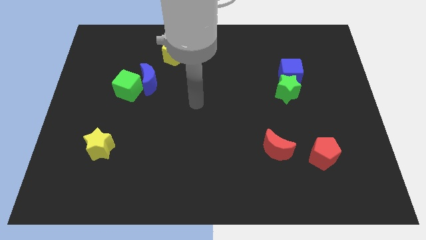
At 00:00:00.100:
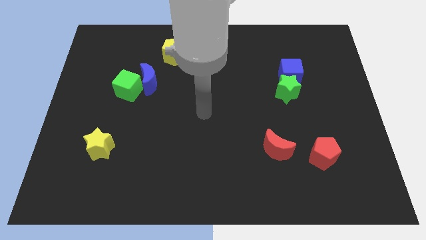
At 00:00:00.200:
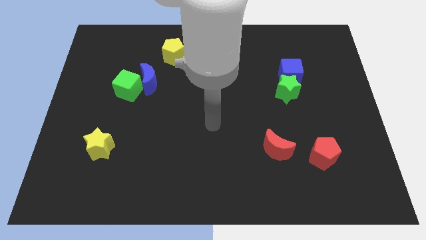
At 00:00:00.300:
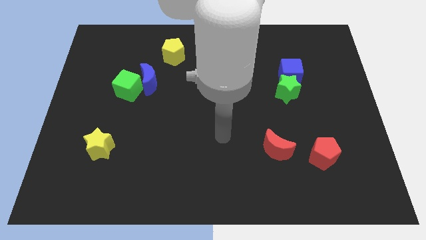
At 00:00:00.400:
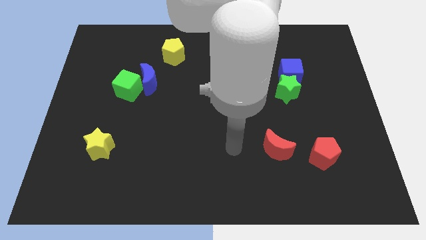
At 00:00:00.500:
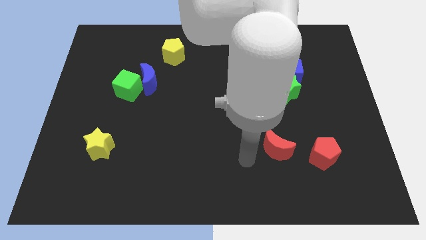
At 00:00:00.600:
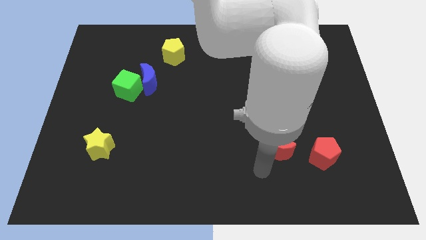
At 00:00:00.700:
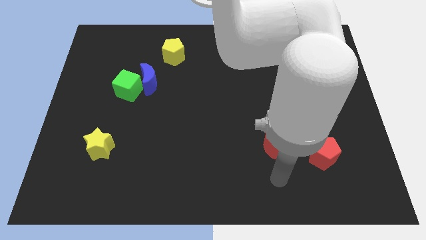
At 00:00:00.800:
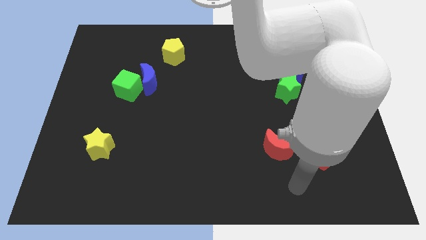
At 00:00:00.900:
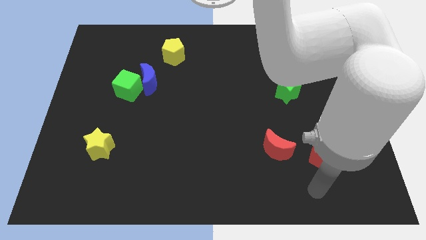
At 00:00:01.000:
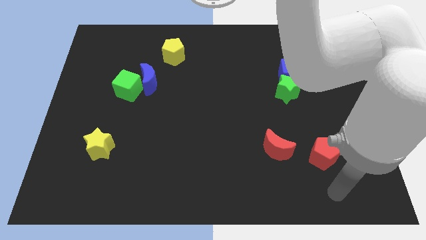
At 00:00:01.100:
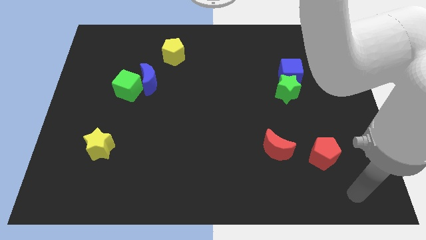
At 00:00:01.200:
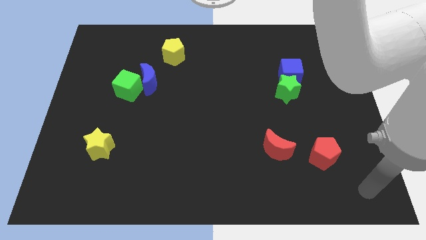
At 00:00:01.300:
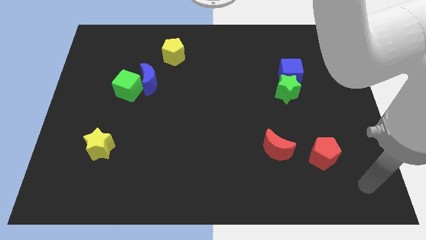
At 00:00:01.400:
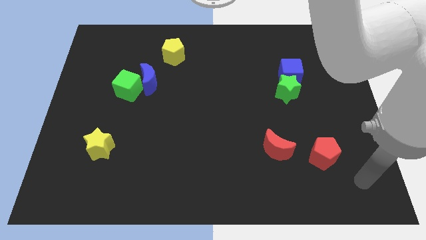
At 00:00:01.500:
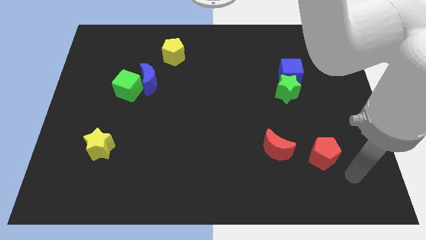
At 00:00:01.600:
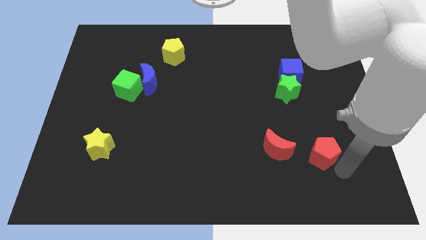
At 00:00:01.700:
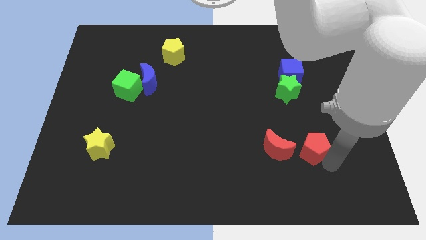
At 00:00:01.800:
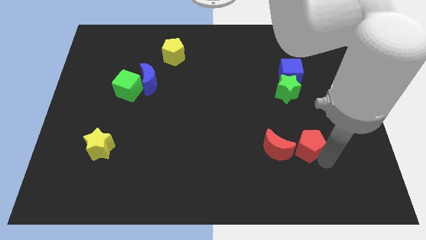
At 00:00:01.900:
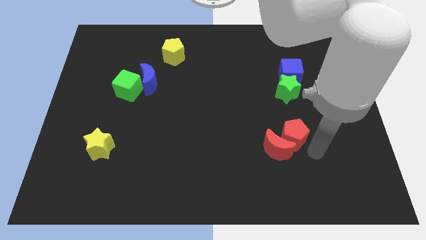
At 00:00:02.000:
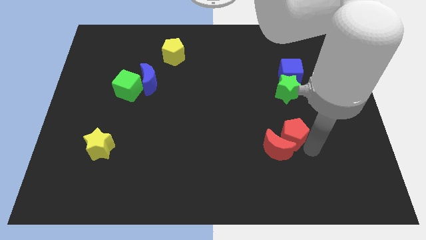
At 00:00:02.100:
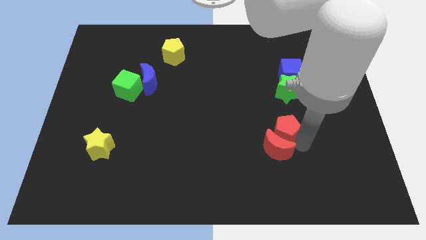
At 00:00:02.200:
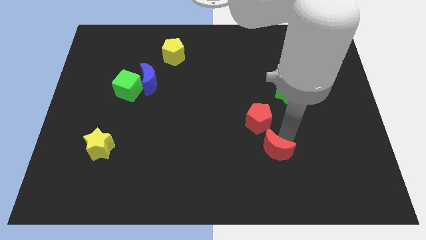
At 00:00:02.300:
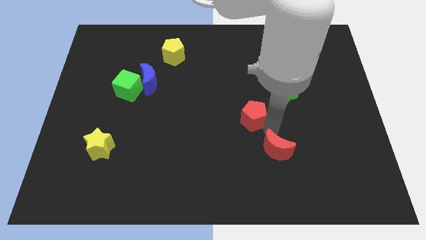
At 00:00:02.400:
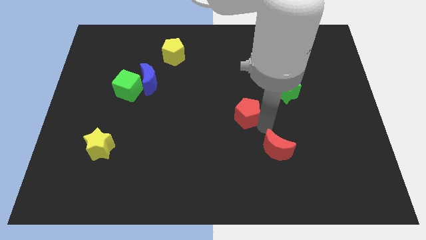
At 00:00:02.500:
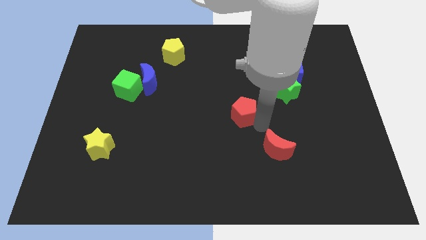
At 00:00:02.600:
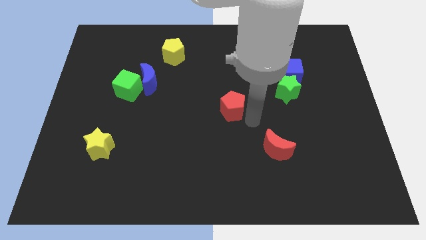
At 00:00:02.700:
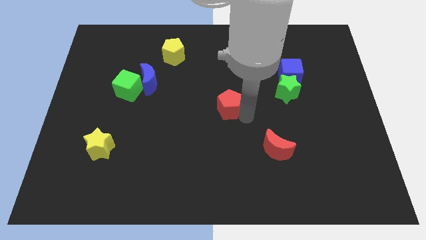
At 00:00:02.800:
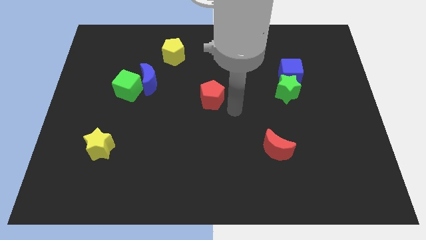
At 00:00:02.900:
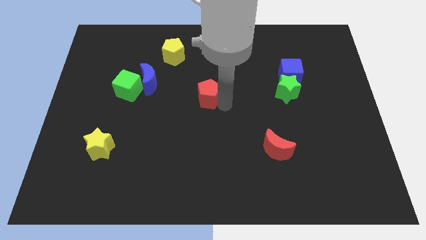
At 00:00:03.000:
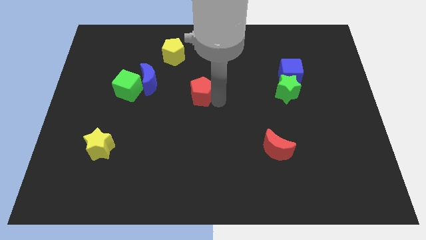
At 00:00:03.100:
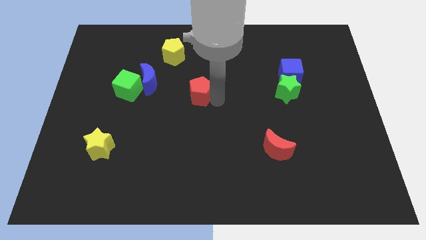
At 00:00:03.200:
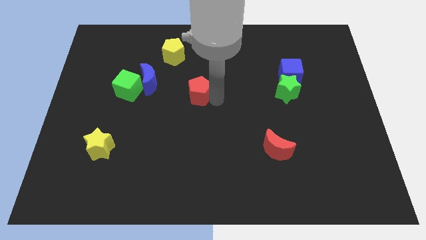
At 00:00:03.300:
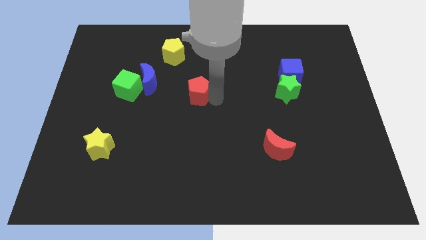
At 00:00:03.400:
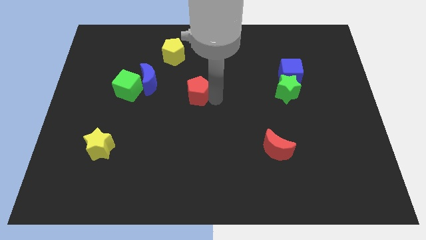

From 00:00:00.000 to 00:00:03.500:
move the red pentagon to the bottom right side of the blue crescent

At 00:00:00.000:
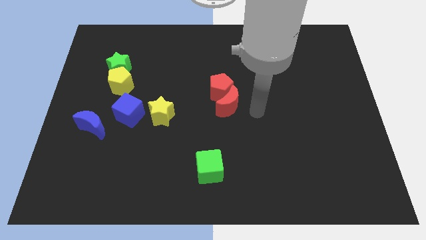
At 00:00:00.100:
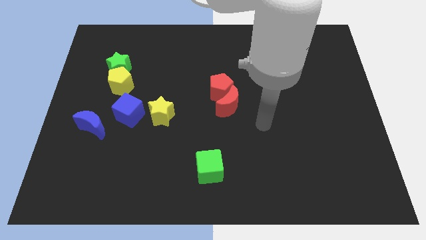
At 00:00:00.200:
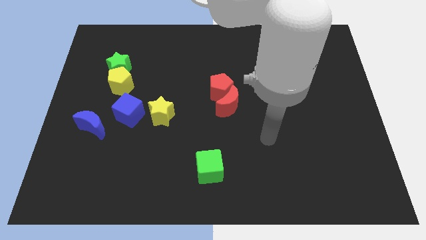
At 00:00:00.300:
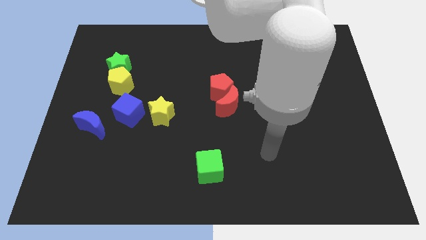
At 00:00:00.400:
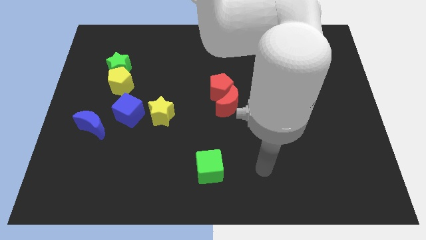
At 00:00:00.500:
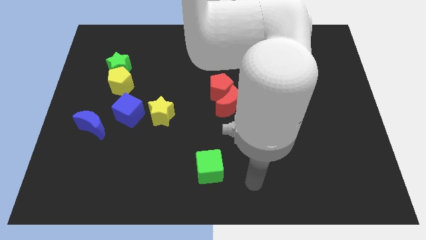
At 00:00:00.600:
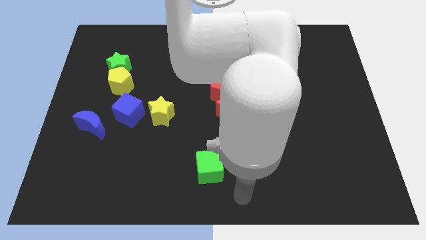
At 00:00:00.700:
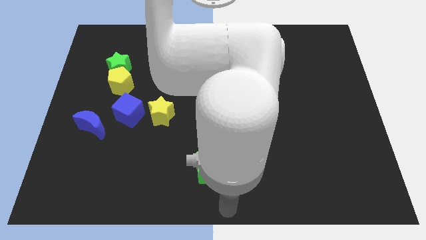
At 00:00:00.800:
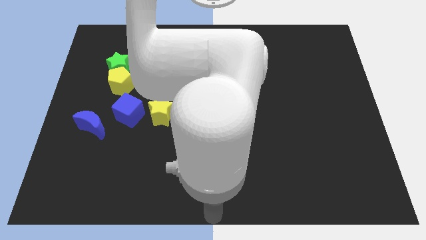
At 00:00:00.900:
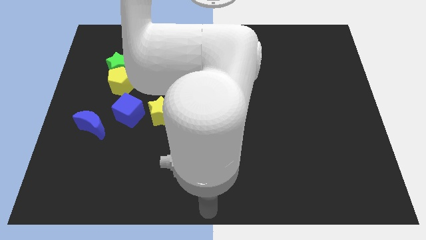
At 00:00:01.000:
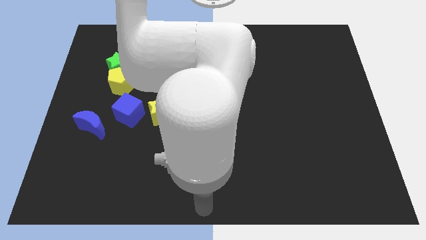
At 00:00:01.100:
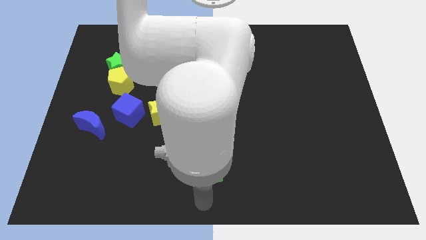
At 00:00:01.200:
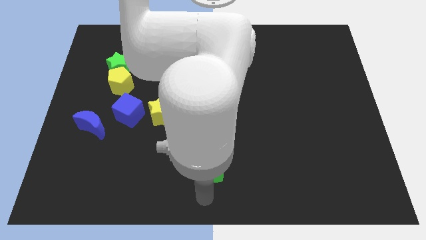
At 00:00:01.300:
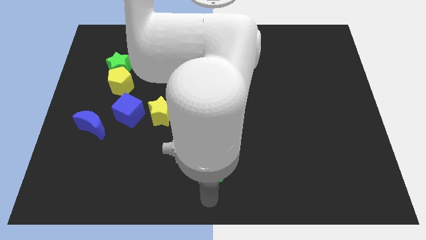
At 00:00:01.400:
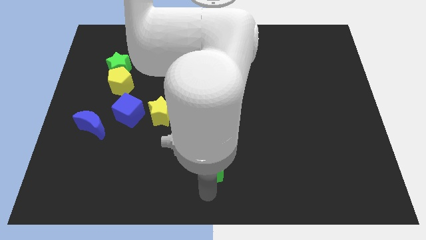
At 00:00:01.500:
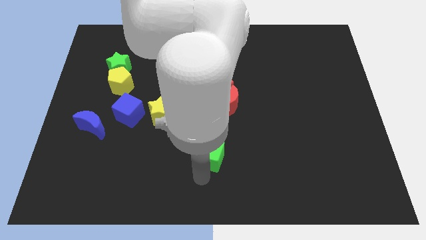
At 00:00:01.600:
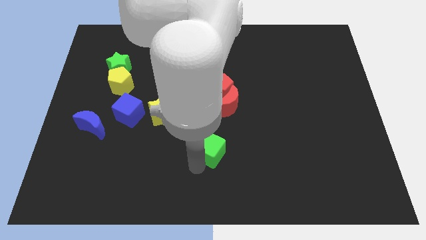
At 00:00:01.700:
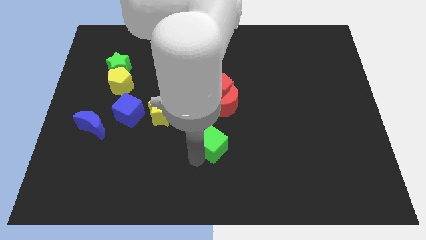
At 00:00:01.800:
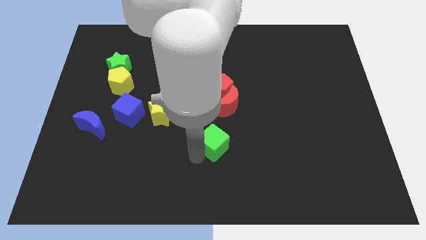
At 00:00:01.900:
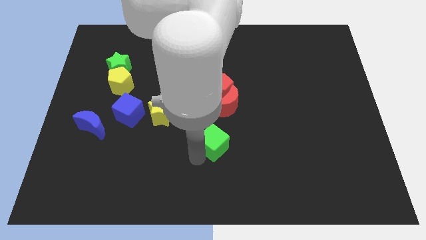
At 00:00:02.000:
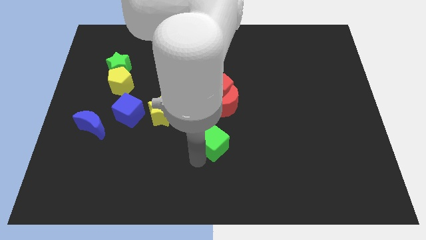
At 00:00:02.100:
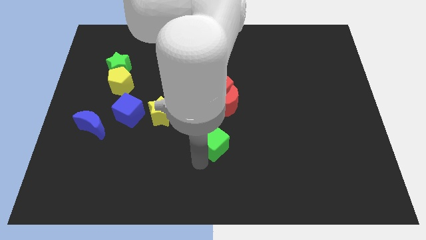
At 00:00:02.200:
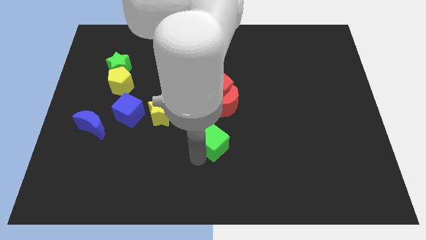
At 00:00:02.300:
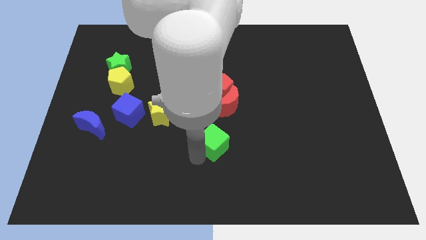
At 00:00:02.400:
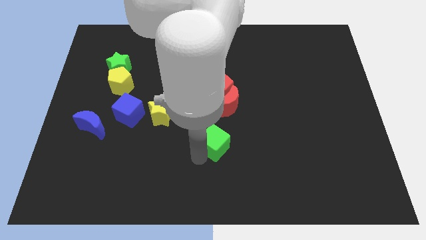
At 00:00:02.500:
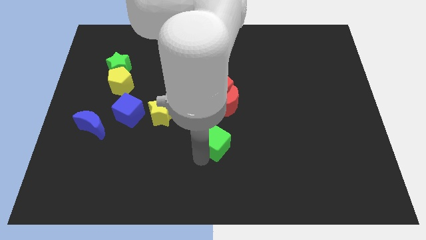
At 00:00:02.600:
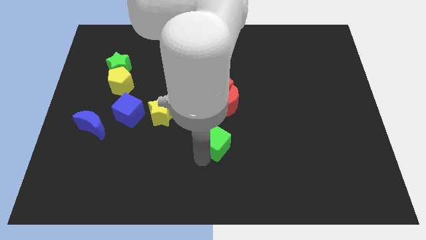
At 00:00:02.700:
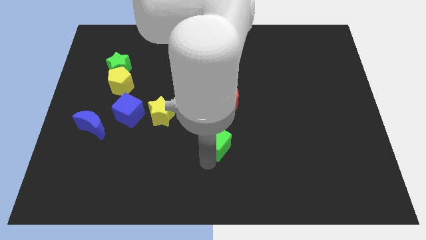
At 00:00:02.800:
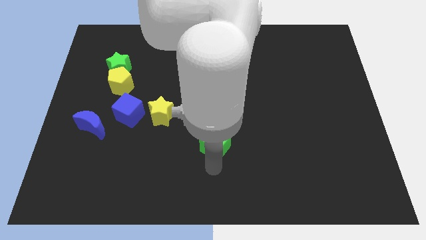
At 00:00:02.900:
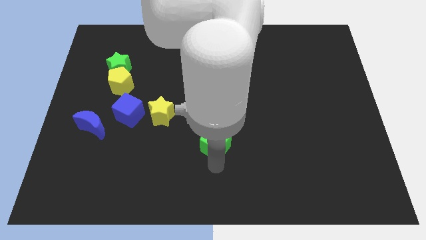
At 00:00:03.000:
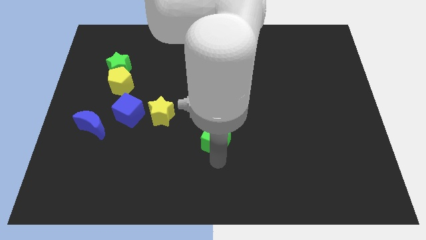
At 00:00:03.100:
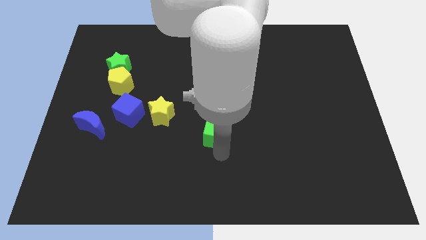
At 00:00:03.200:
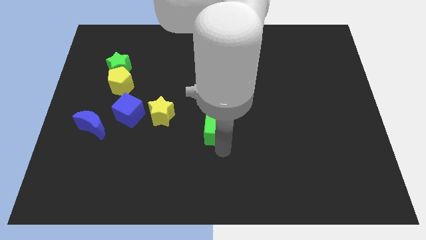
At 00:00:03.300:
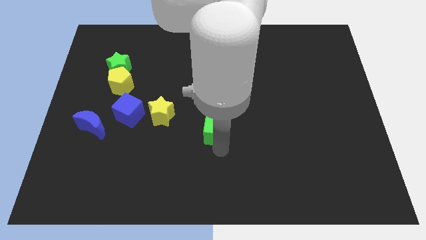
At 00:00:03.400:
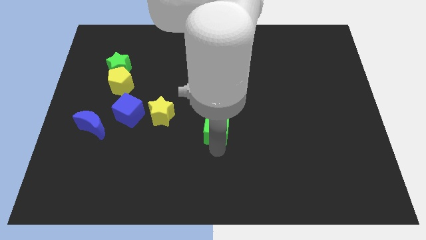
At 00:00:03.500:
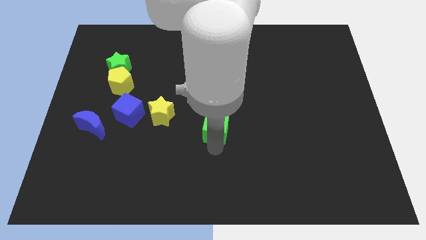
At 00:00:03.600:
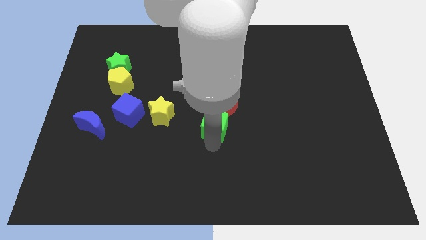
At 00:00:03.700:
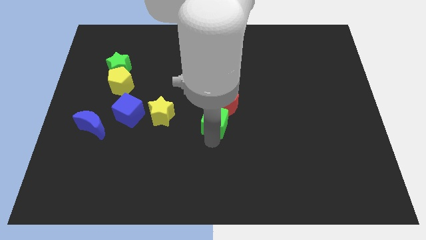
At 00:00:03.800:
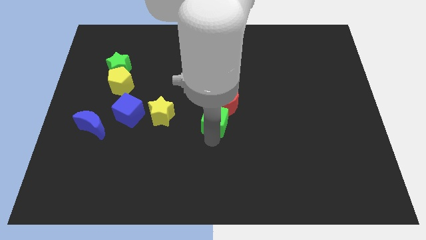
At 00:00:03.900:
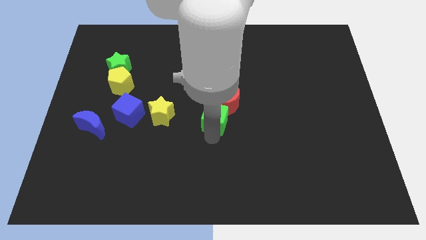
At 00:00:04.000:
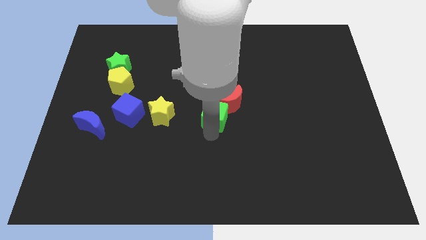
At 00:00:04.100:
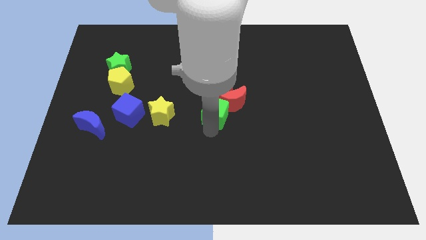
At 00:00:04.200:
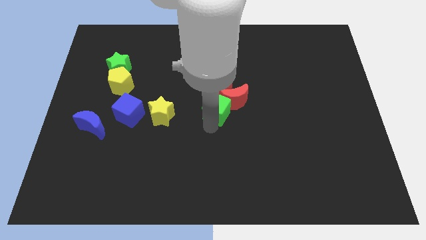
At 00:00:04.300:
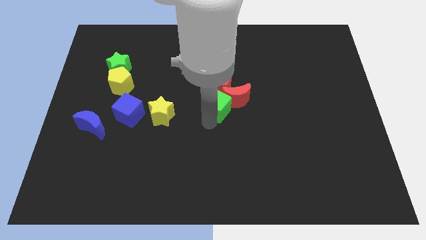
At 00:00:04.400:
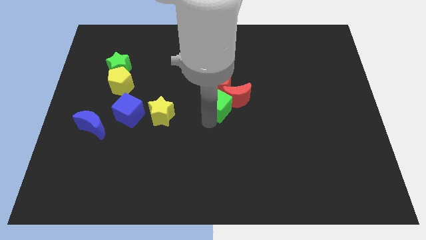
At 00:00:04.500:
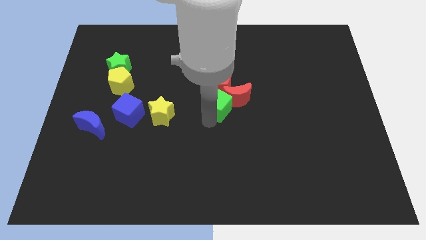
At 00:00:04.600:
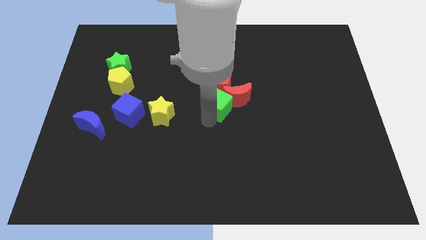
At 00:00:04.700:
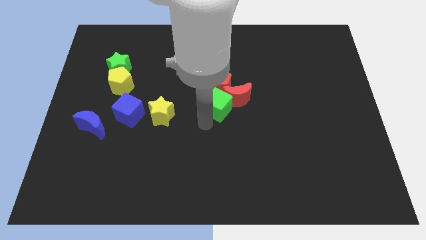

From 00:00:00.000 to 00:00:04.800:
move the green cube into the red crescent

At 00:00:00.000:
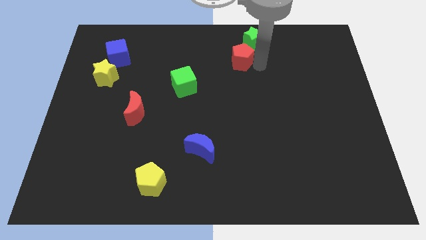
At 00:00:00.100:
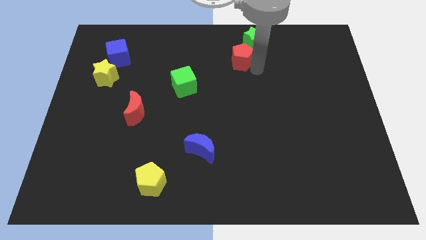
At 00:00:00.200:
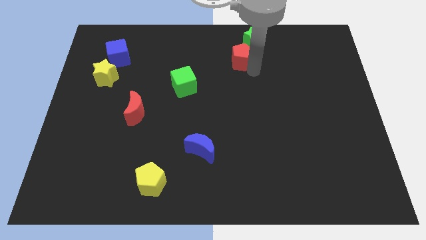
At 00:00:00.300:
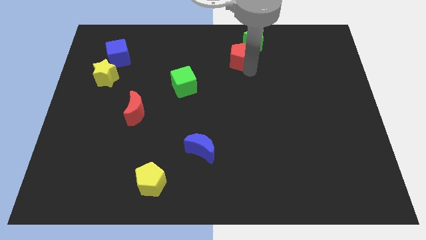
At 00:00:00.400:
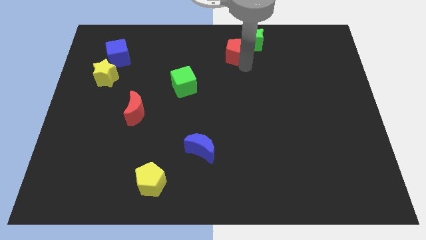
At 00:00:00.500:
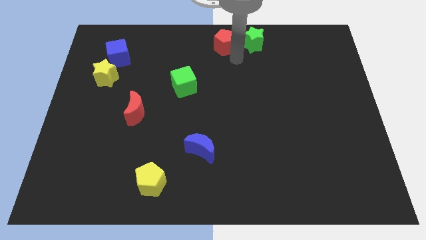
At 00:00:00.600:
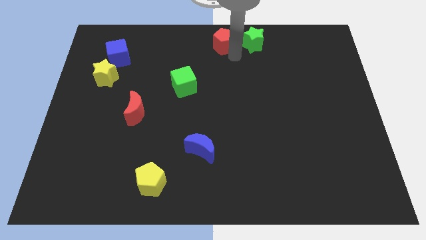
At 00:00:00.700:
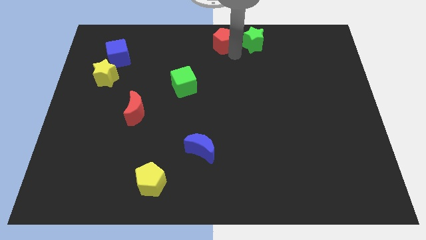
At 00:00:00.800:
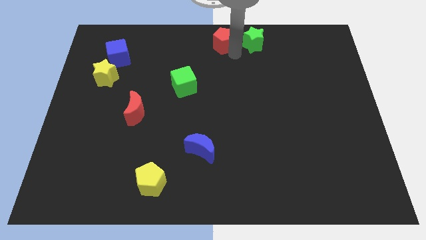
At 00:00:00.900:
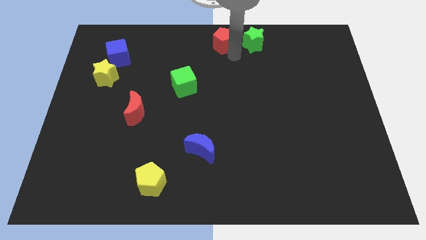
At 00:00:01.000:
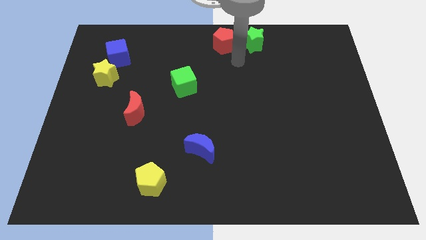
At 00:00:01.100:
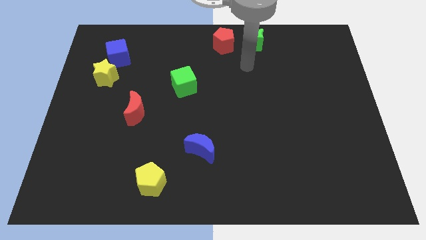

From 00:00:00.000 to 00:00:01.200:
place the red pentagon to the left of the green star
